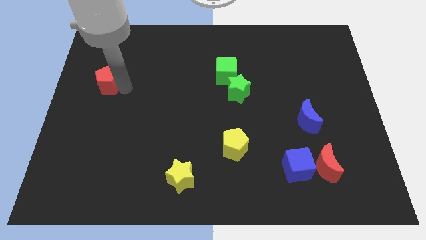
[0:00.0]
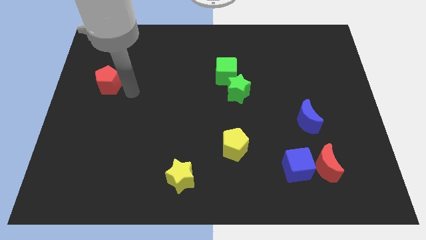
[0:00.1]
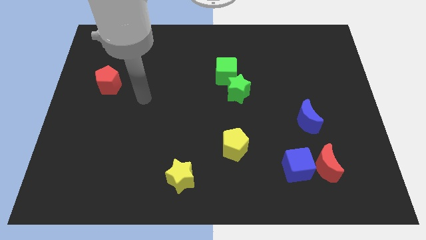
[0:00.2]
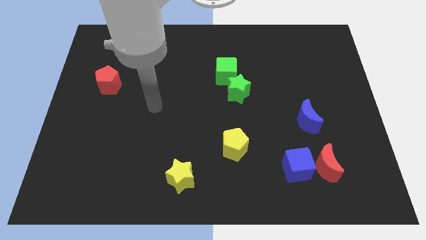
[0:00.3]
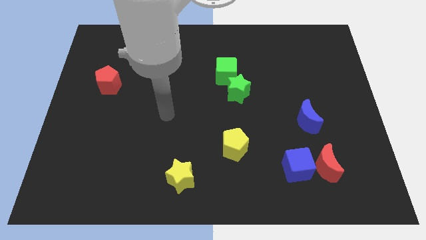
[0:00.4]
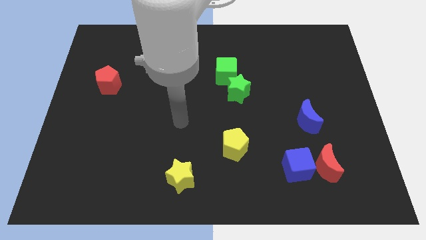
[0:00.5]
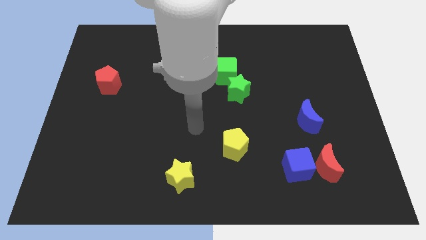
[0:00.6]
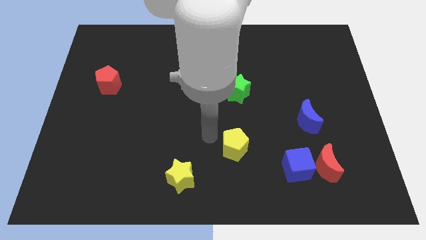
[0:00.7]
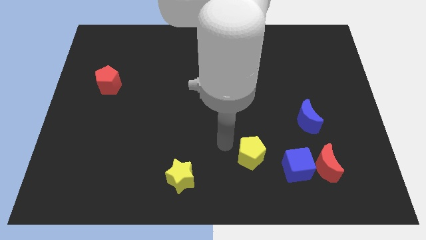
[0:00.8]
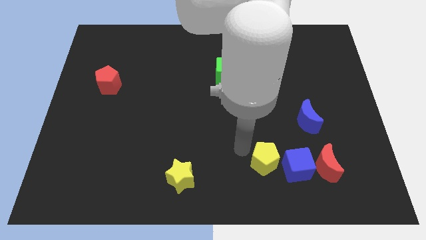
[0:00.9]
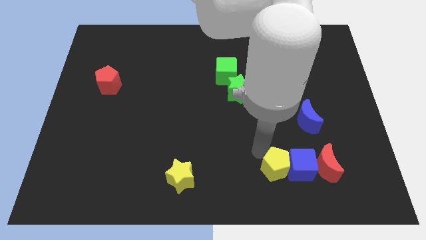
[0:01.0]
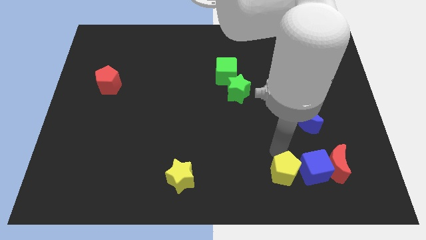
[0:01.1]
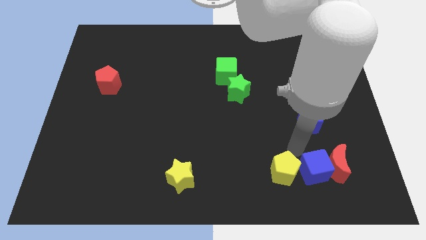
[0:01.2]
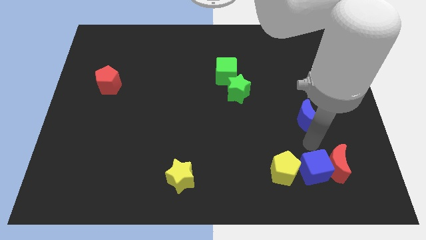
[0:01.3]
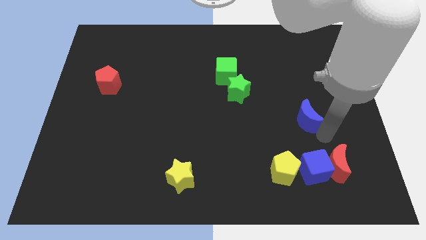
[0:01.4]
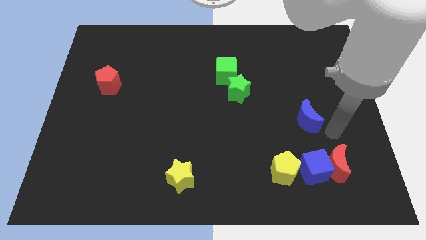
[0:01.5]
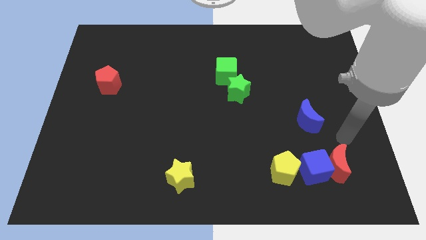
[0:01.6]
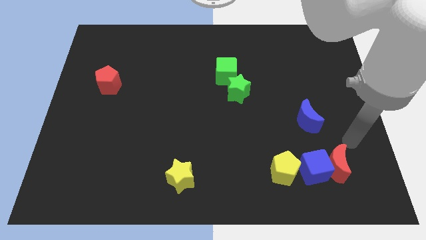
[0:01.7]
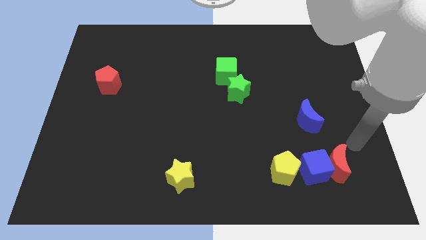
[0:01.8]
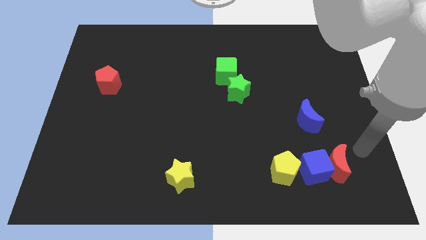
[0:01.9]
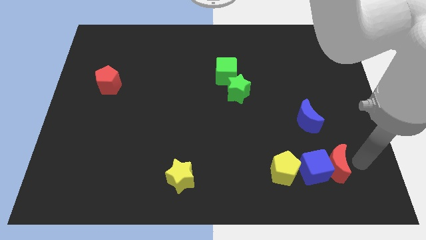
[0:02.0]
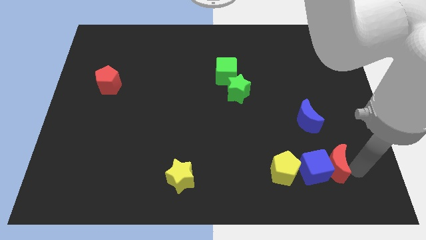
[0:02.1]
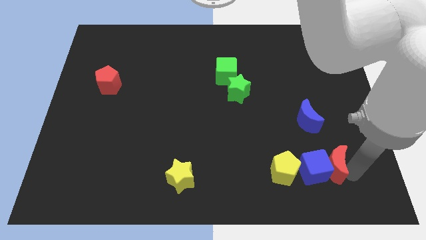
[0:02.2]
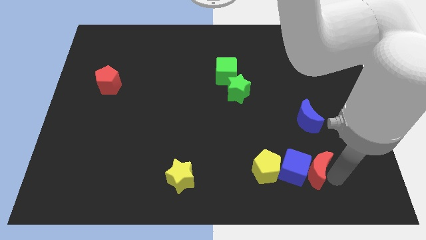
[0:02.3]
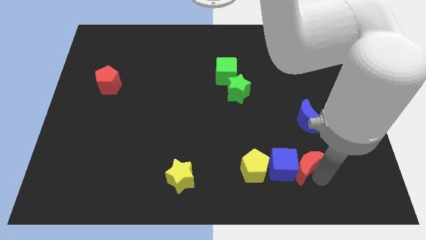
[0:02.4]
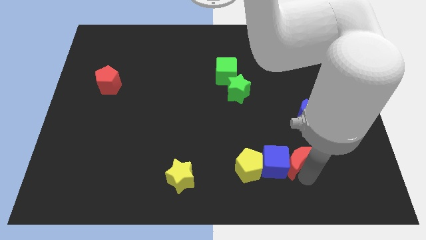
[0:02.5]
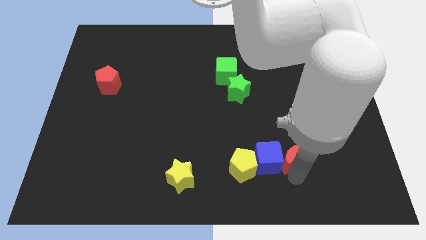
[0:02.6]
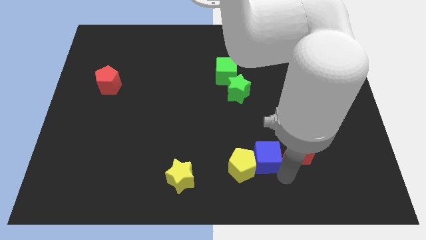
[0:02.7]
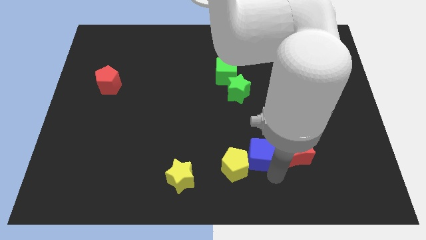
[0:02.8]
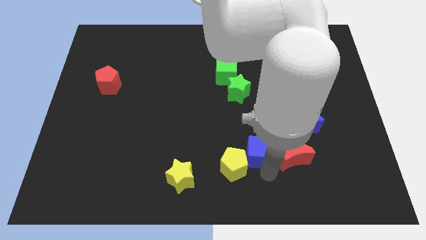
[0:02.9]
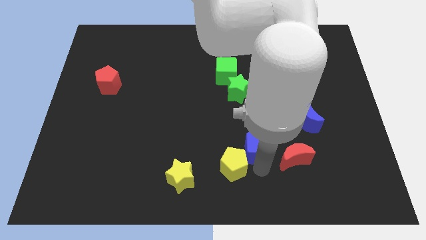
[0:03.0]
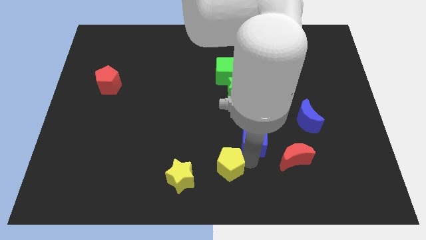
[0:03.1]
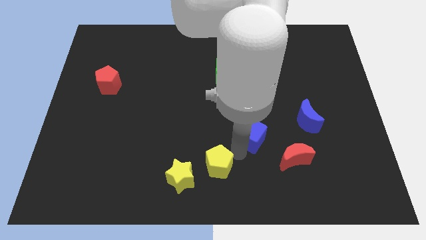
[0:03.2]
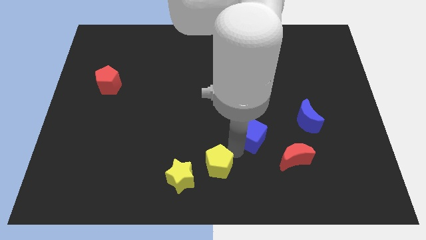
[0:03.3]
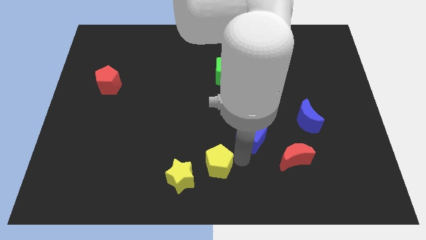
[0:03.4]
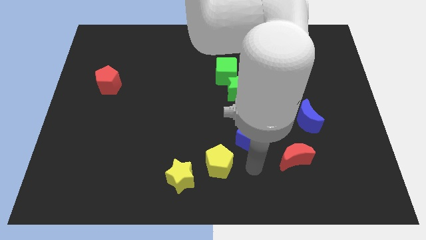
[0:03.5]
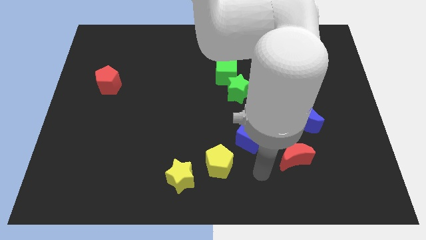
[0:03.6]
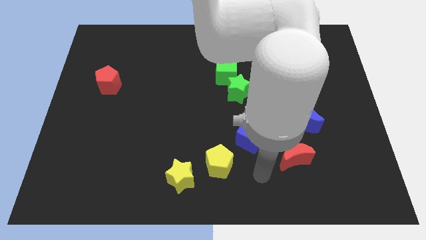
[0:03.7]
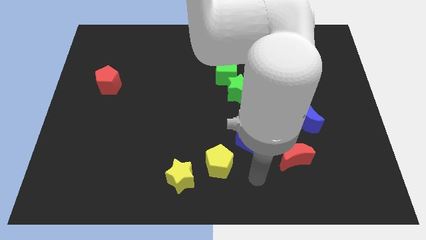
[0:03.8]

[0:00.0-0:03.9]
push the yellow pentagon diagonally to the bottom right side of the red pentagon

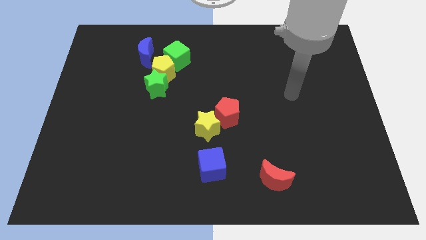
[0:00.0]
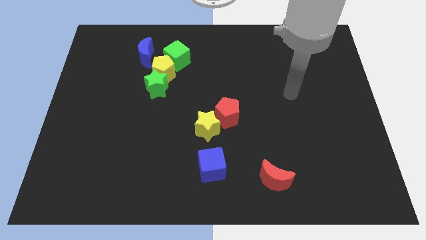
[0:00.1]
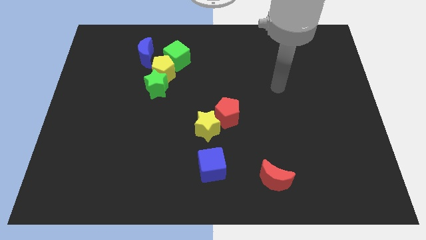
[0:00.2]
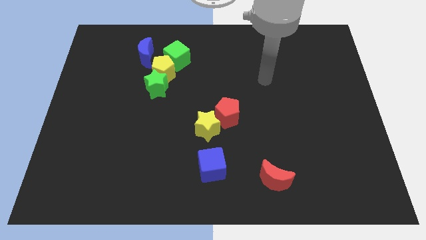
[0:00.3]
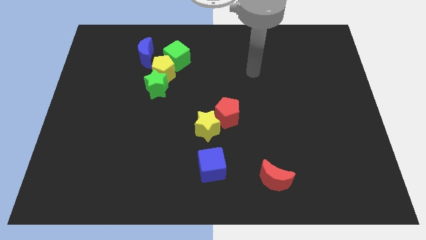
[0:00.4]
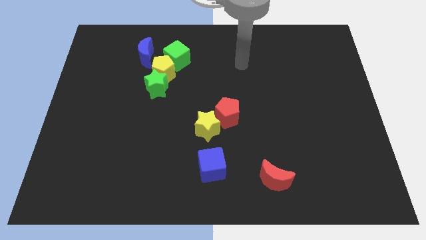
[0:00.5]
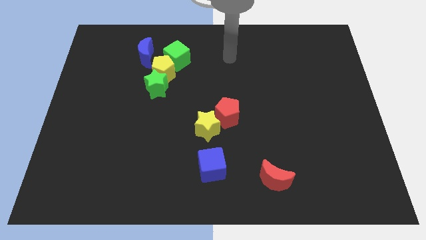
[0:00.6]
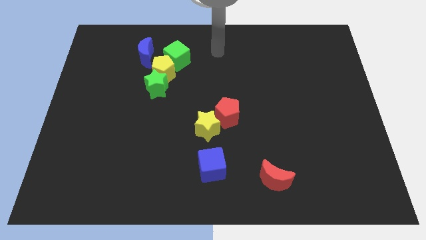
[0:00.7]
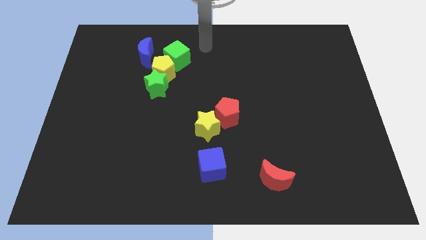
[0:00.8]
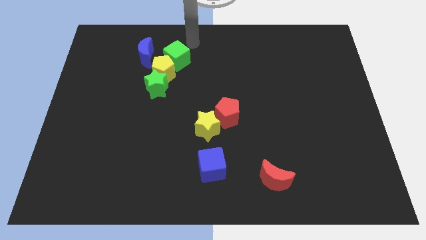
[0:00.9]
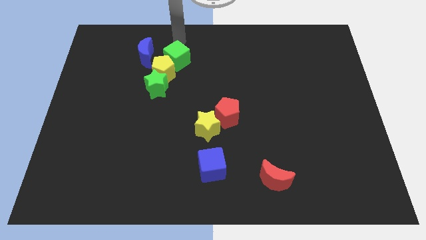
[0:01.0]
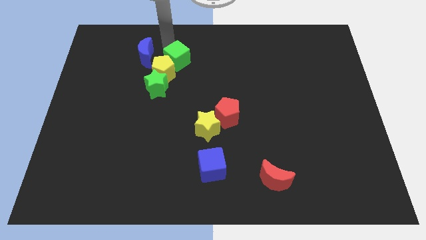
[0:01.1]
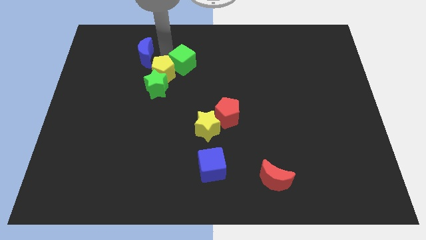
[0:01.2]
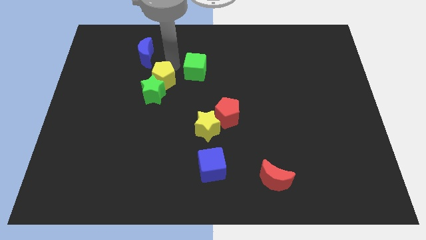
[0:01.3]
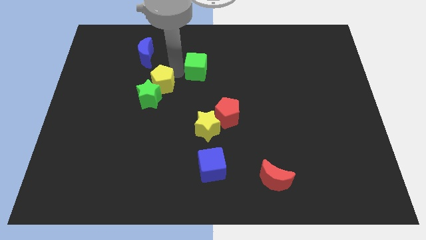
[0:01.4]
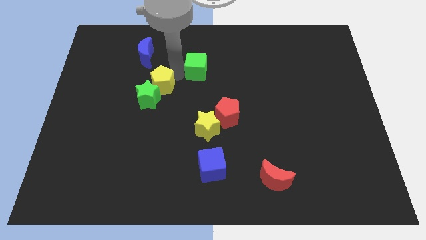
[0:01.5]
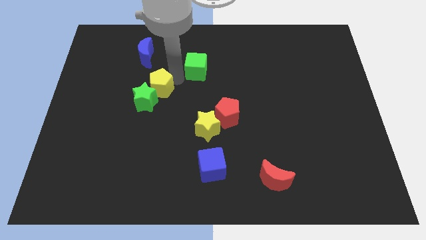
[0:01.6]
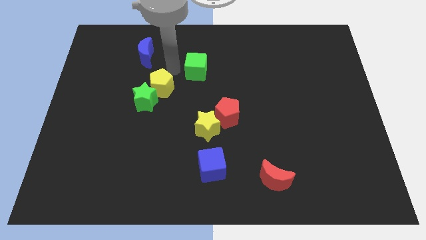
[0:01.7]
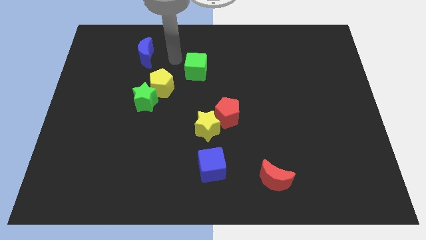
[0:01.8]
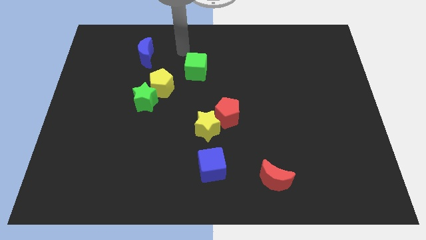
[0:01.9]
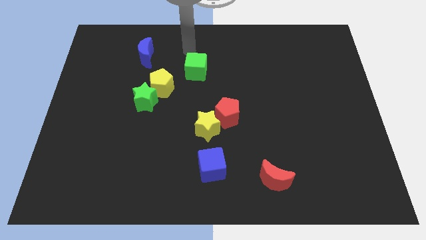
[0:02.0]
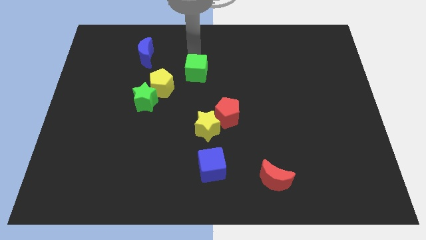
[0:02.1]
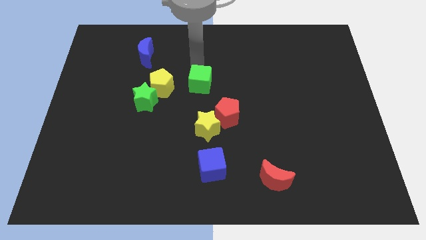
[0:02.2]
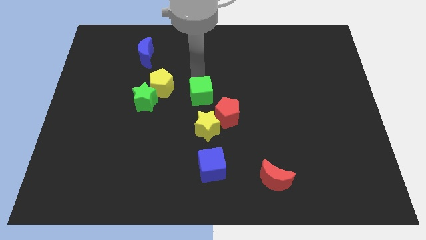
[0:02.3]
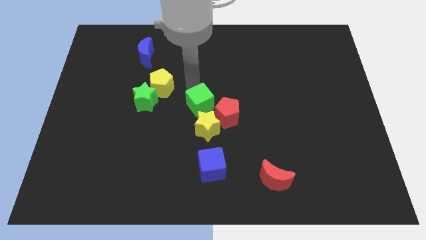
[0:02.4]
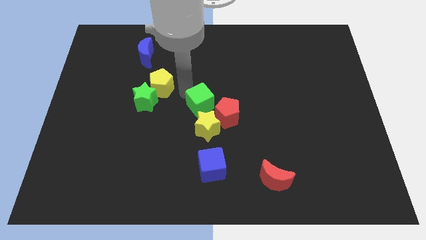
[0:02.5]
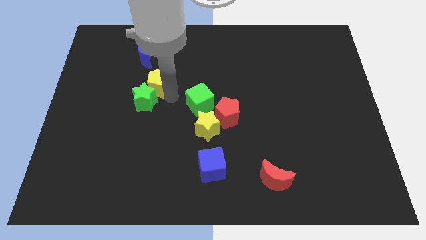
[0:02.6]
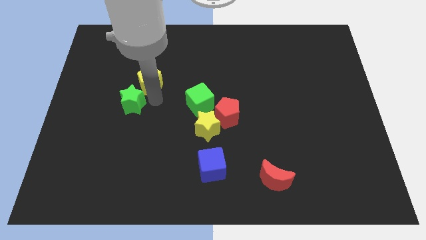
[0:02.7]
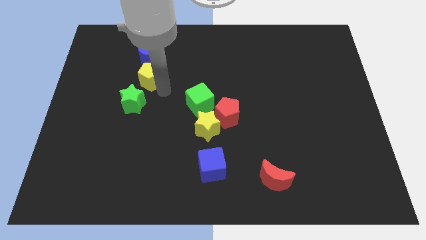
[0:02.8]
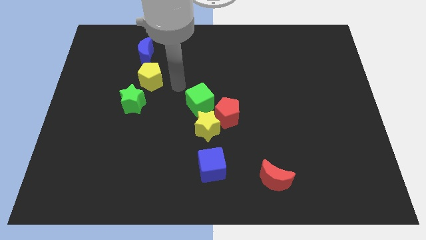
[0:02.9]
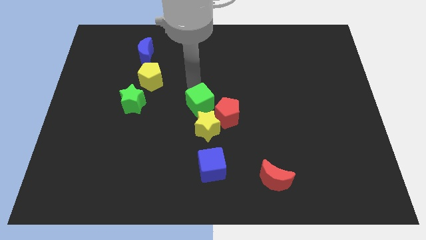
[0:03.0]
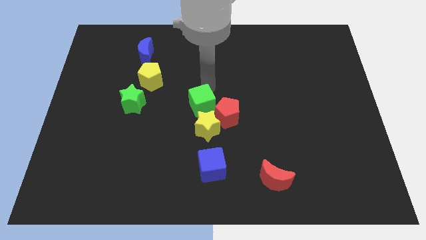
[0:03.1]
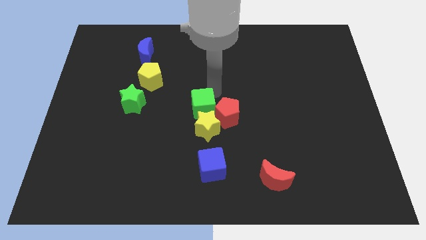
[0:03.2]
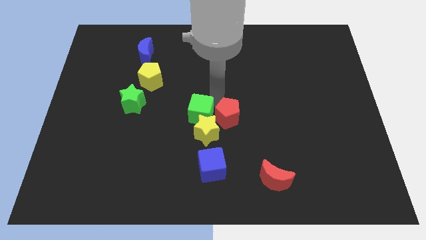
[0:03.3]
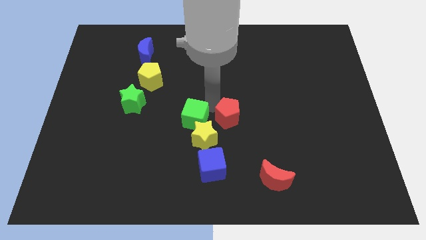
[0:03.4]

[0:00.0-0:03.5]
separate the green cube from yellow pentagon place it to the top of yellow star

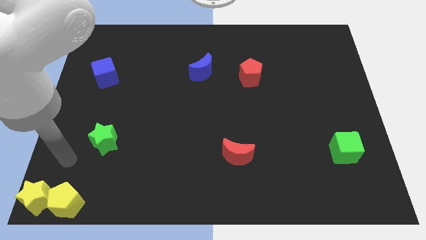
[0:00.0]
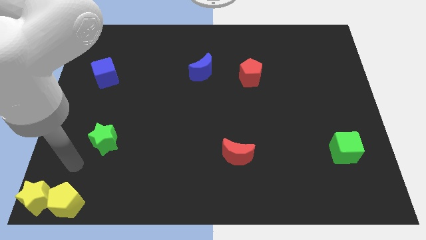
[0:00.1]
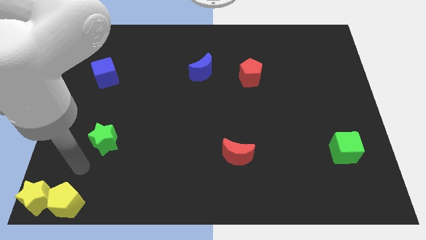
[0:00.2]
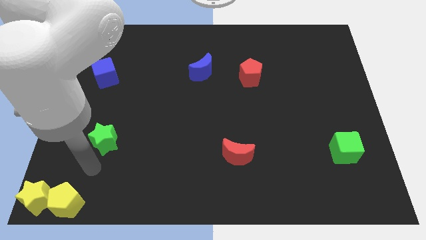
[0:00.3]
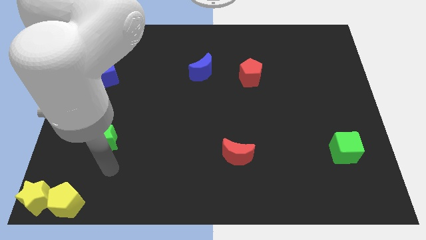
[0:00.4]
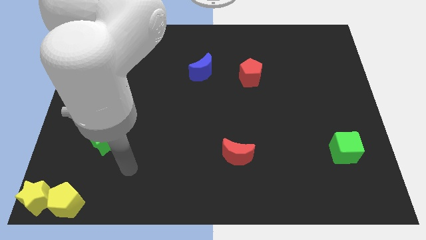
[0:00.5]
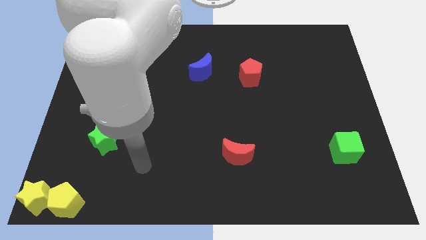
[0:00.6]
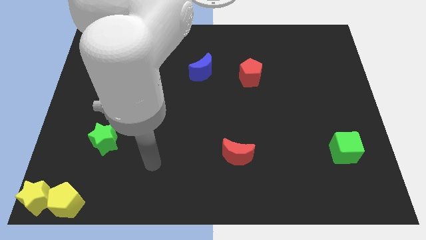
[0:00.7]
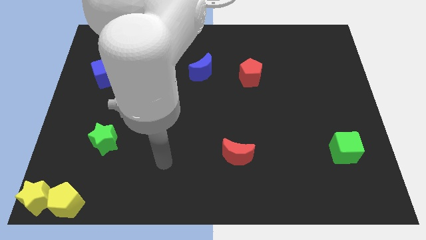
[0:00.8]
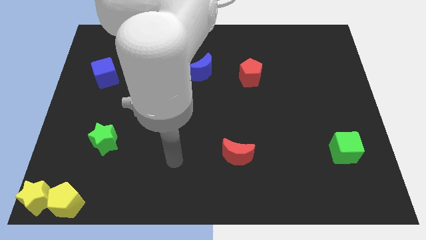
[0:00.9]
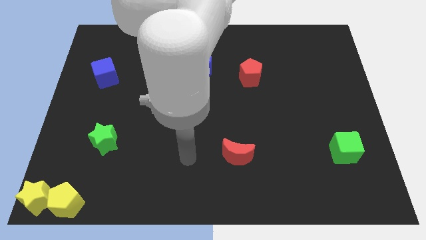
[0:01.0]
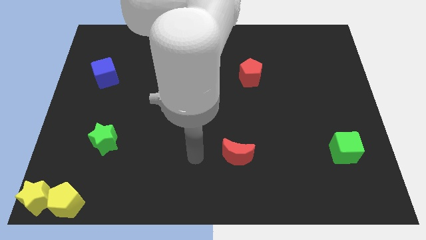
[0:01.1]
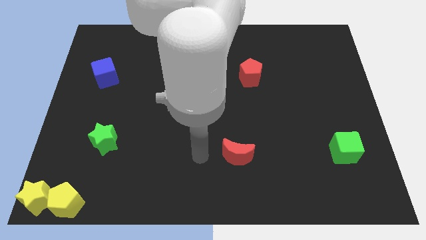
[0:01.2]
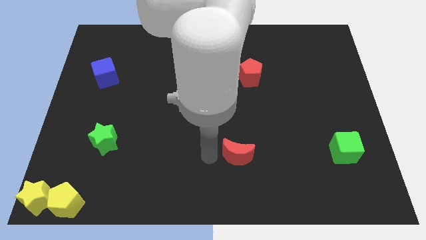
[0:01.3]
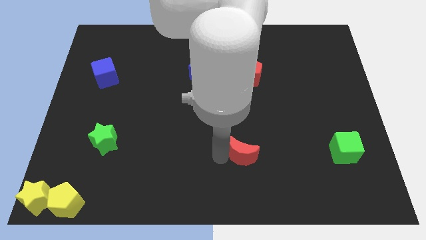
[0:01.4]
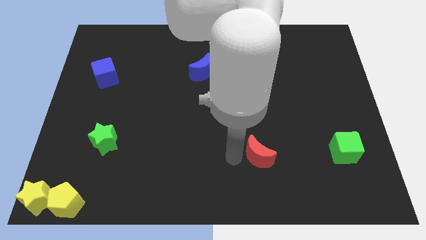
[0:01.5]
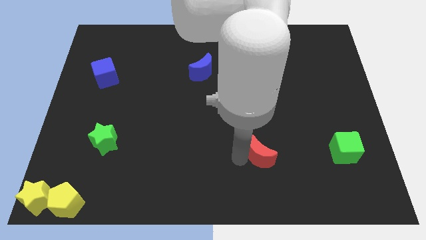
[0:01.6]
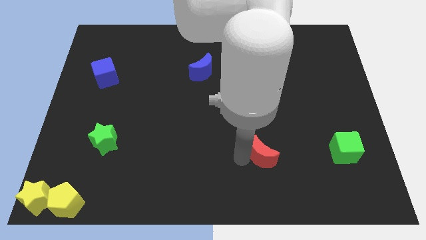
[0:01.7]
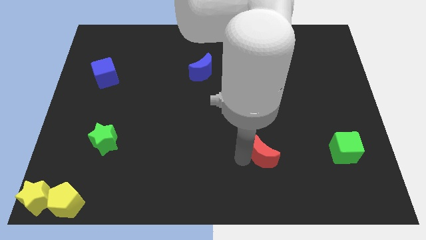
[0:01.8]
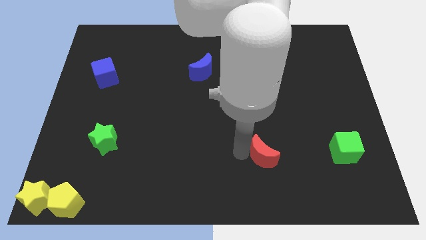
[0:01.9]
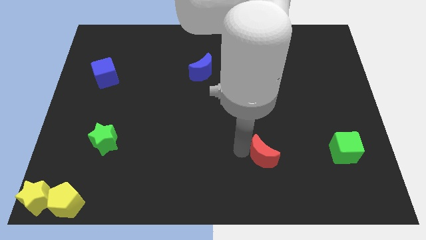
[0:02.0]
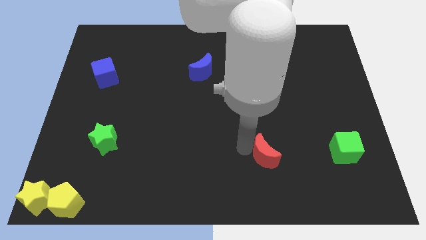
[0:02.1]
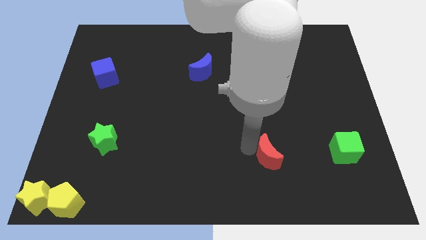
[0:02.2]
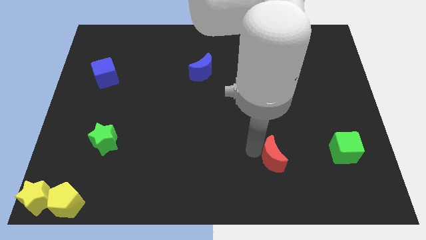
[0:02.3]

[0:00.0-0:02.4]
move the red crescent slightly towards right
